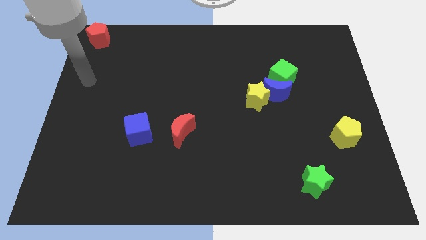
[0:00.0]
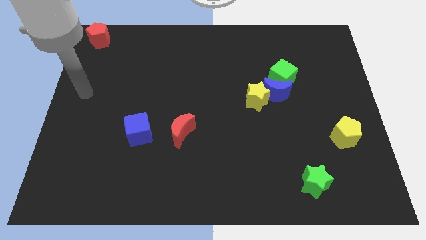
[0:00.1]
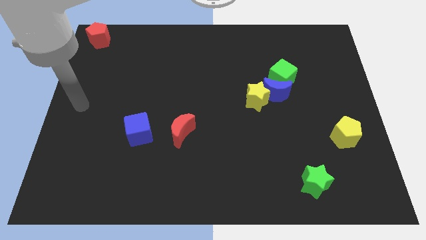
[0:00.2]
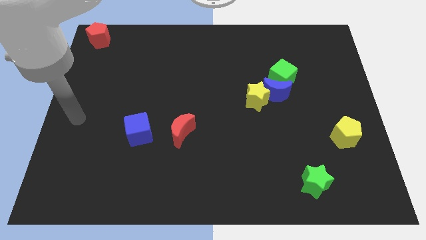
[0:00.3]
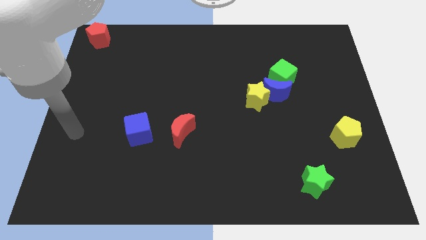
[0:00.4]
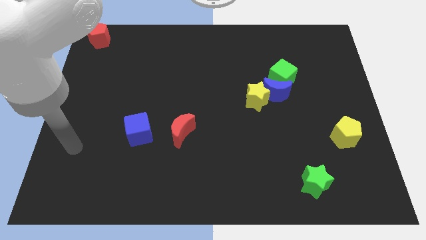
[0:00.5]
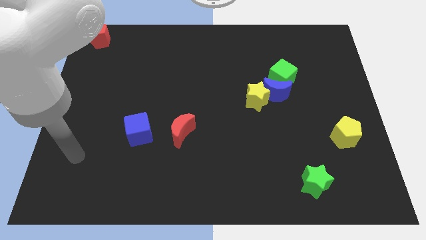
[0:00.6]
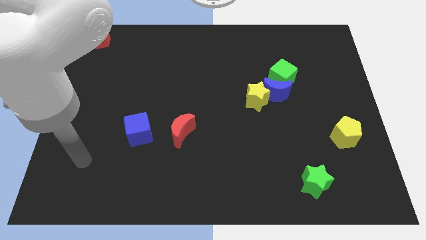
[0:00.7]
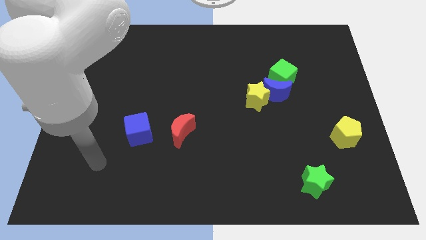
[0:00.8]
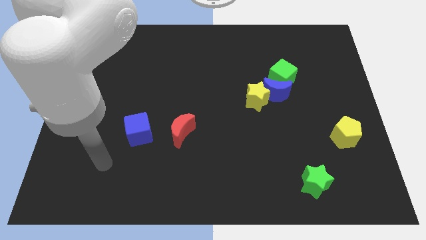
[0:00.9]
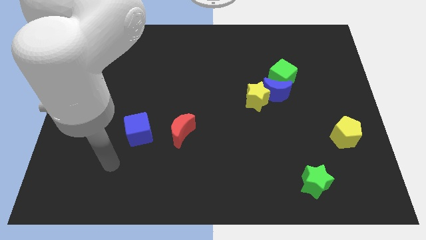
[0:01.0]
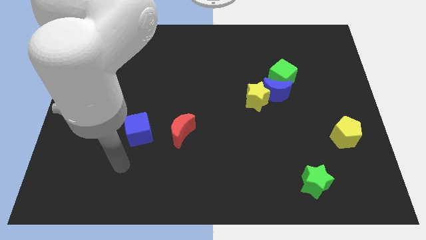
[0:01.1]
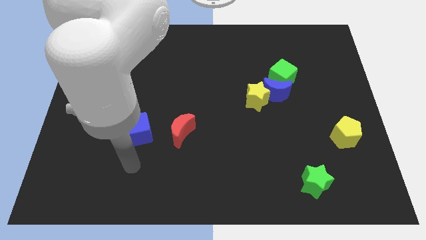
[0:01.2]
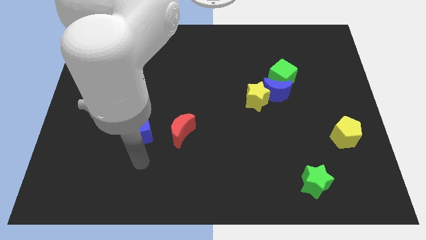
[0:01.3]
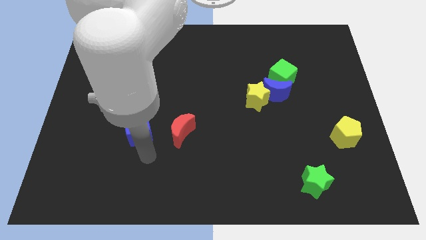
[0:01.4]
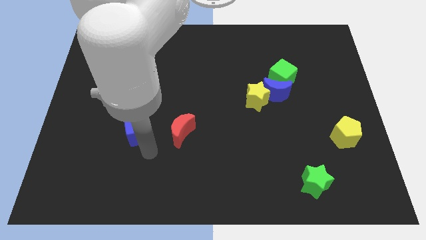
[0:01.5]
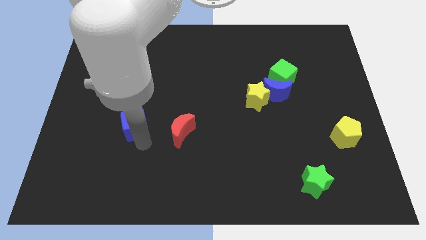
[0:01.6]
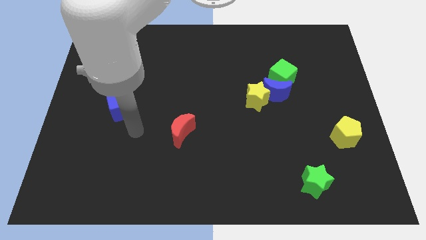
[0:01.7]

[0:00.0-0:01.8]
tap the blue cube

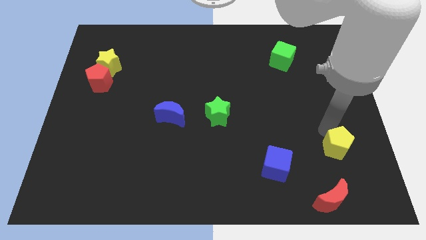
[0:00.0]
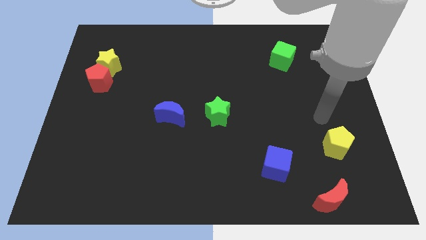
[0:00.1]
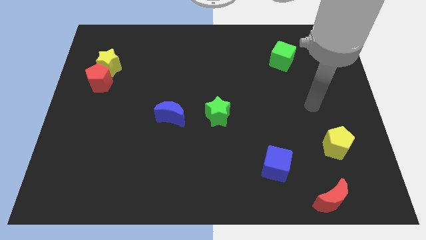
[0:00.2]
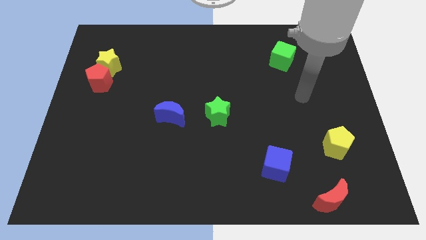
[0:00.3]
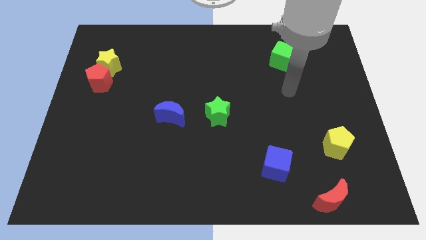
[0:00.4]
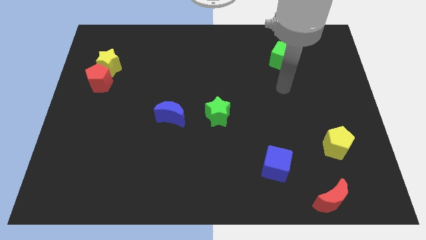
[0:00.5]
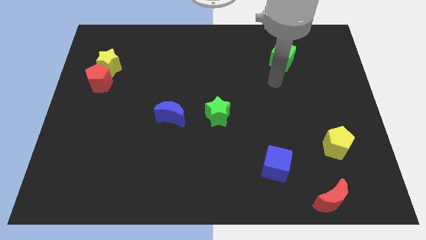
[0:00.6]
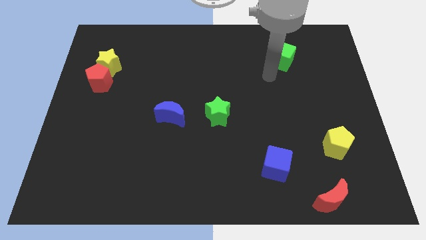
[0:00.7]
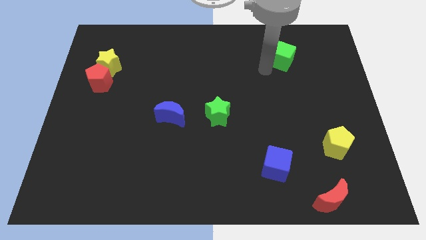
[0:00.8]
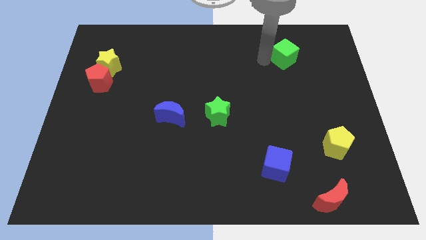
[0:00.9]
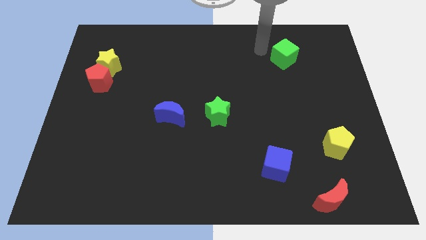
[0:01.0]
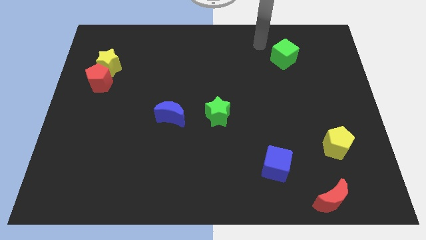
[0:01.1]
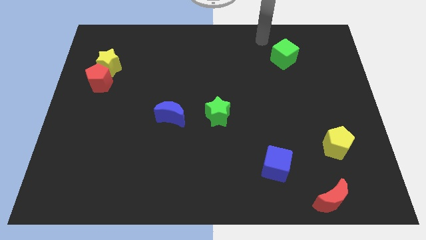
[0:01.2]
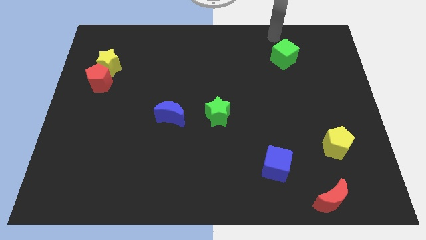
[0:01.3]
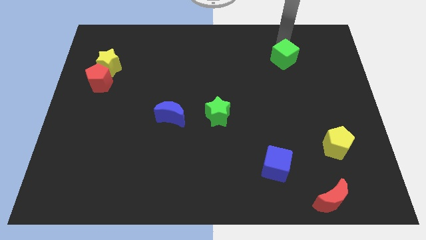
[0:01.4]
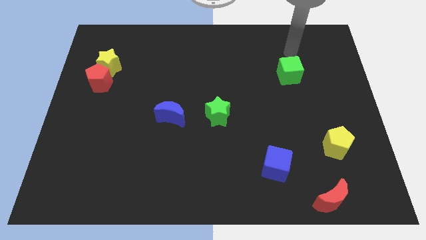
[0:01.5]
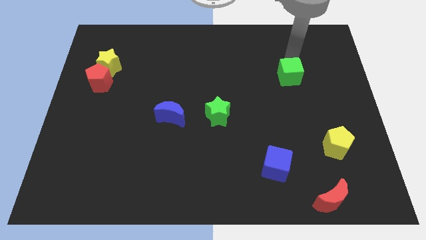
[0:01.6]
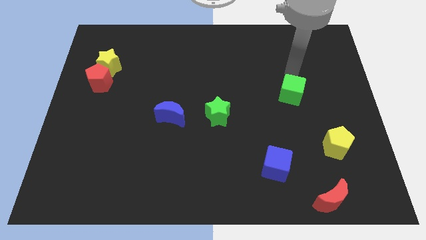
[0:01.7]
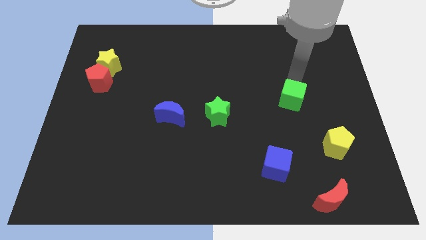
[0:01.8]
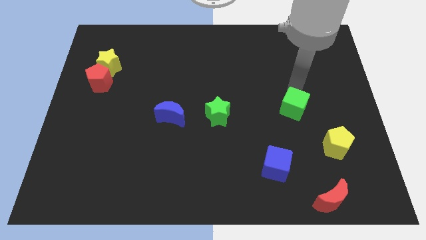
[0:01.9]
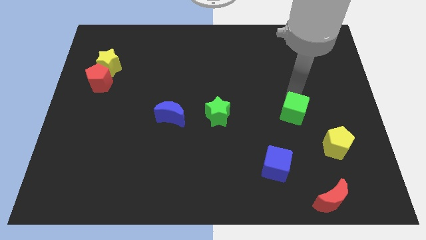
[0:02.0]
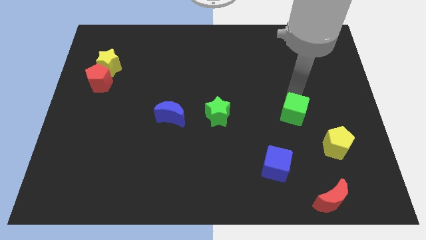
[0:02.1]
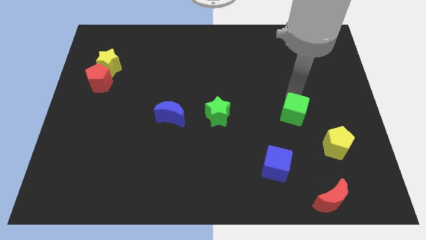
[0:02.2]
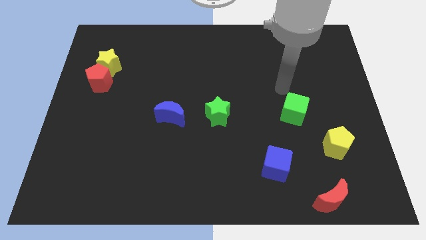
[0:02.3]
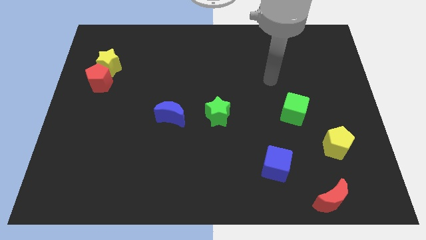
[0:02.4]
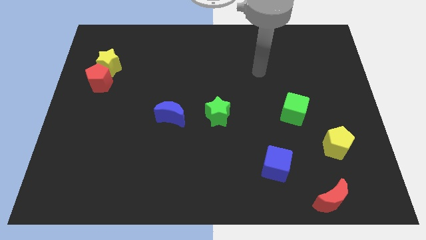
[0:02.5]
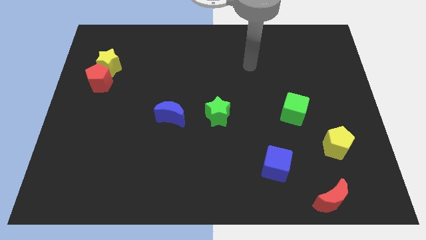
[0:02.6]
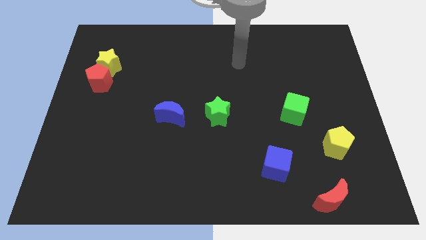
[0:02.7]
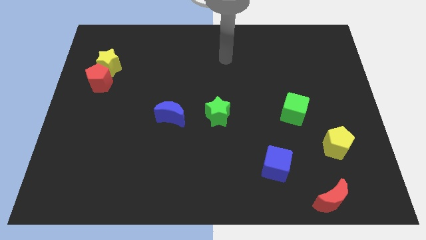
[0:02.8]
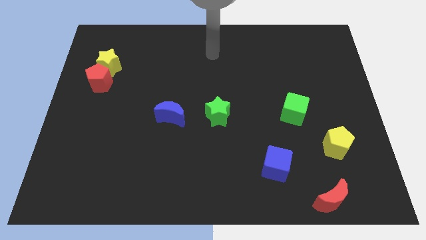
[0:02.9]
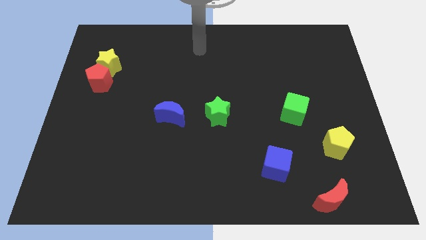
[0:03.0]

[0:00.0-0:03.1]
move the green cube closer to the yellow pentagon

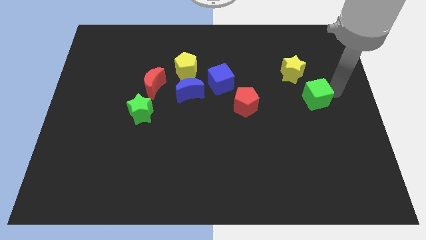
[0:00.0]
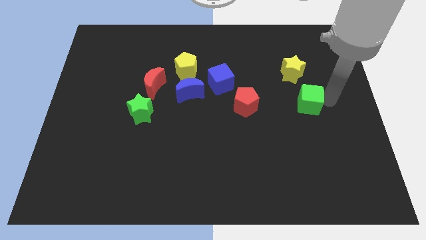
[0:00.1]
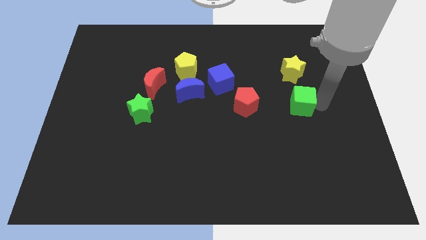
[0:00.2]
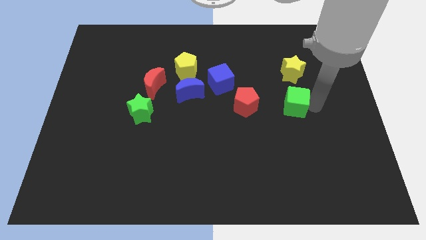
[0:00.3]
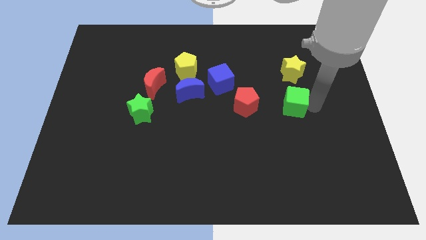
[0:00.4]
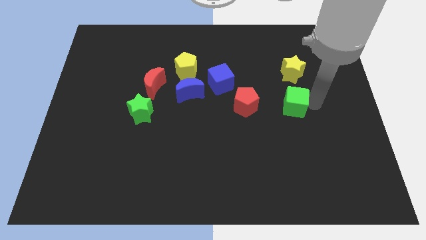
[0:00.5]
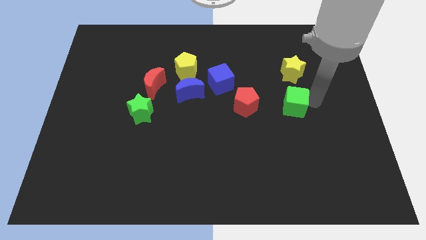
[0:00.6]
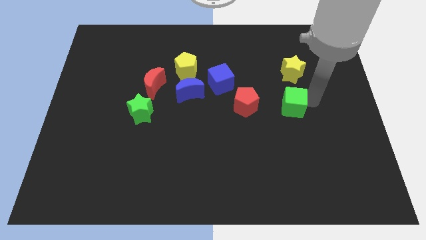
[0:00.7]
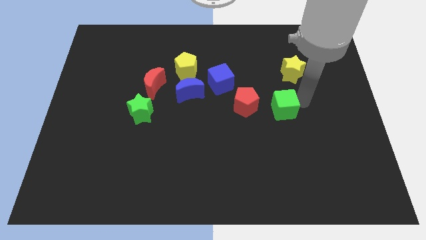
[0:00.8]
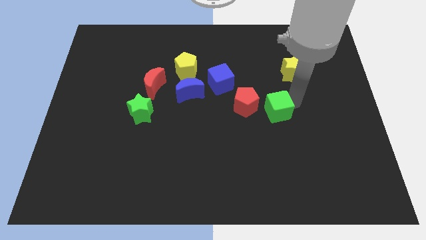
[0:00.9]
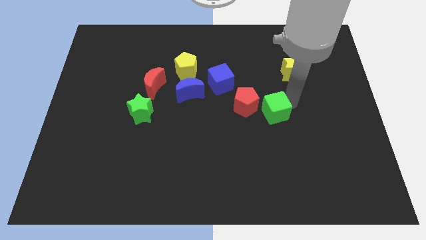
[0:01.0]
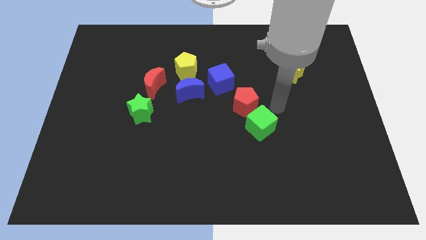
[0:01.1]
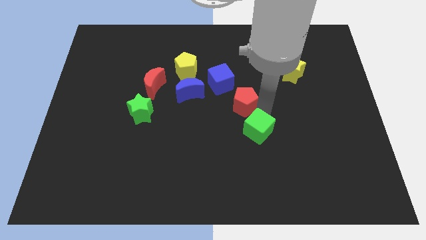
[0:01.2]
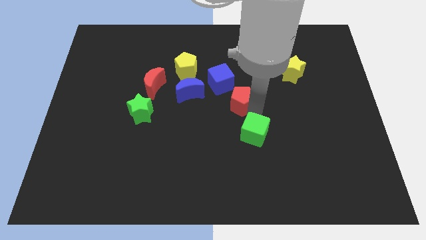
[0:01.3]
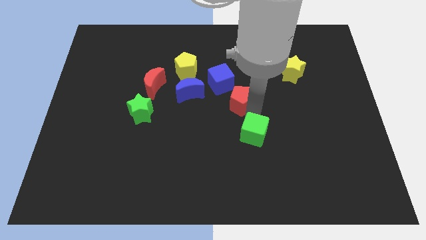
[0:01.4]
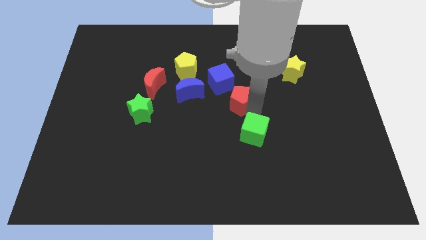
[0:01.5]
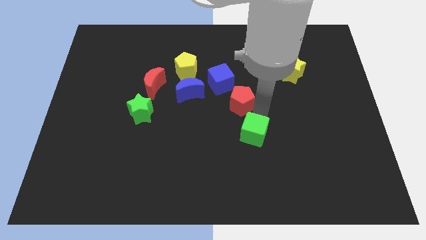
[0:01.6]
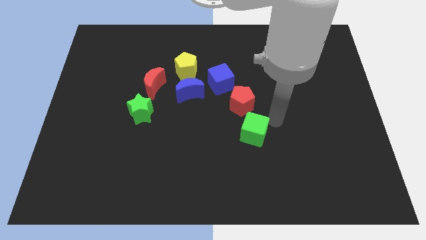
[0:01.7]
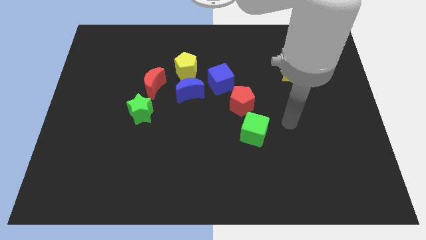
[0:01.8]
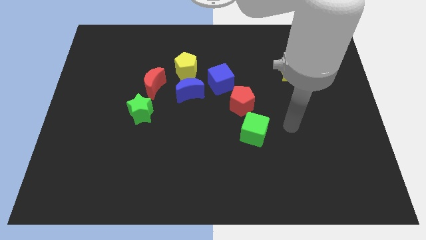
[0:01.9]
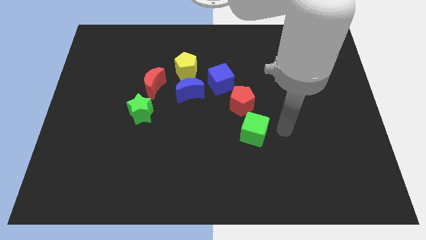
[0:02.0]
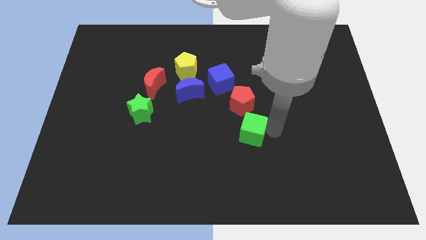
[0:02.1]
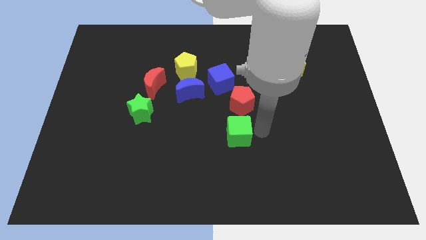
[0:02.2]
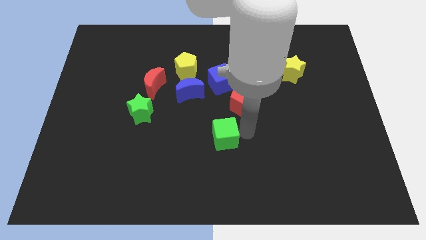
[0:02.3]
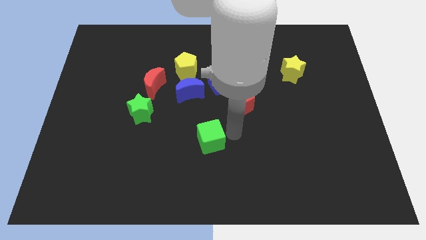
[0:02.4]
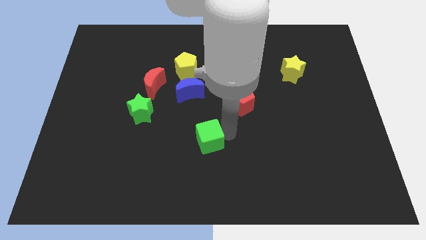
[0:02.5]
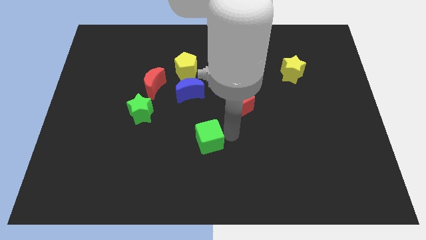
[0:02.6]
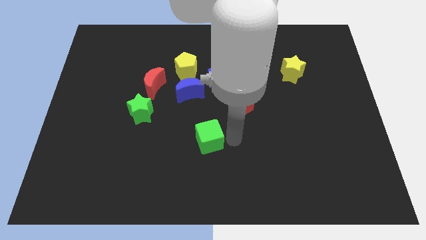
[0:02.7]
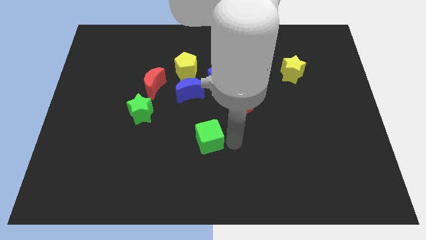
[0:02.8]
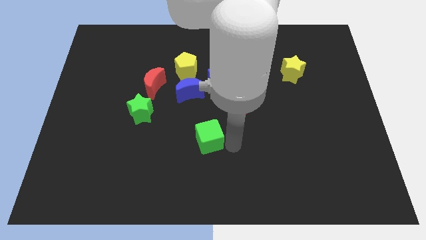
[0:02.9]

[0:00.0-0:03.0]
place the green cube below the blue moon

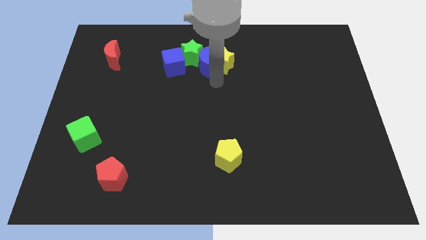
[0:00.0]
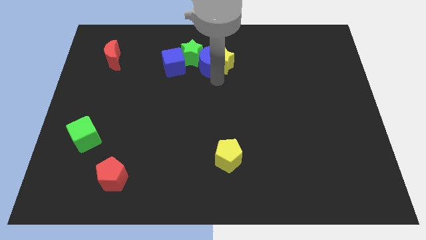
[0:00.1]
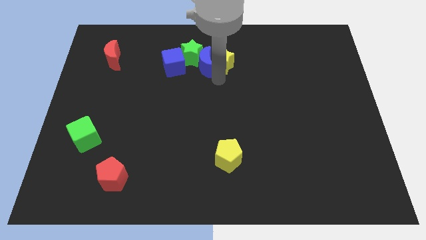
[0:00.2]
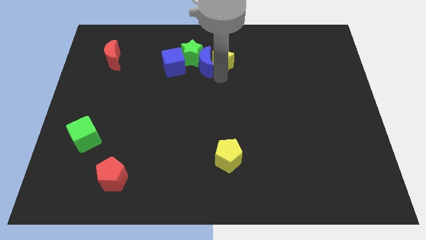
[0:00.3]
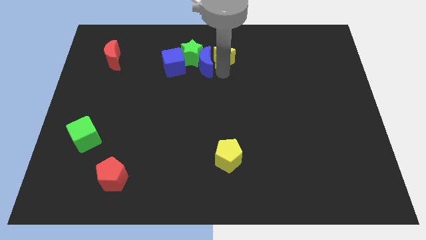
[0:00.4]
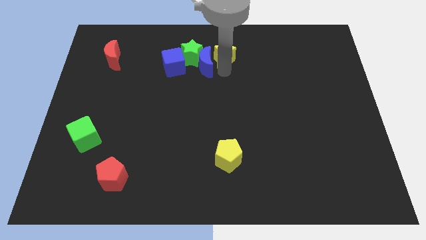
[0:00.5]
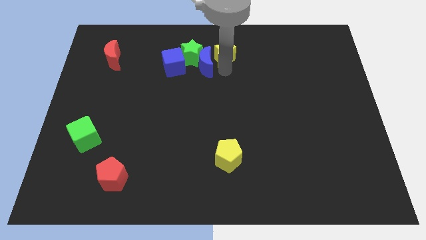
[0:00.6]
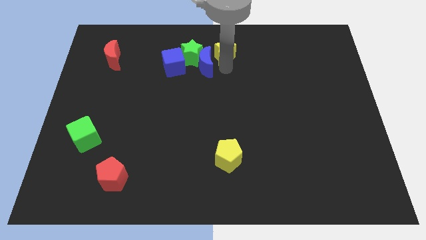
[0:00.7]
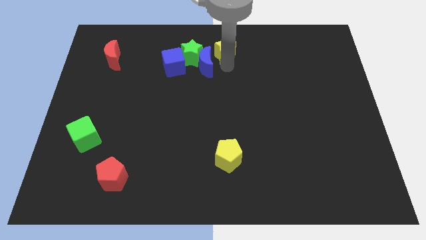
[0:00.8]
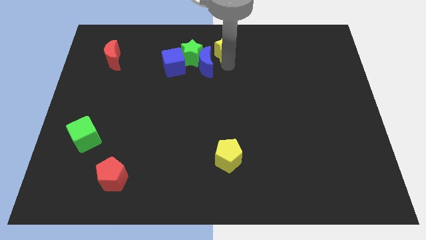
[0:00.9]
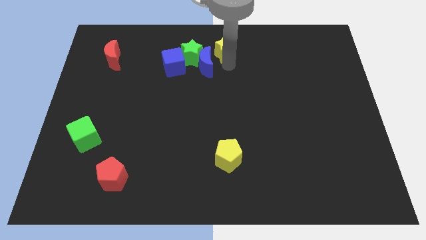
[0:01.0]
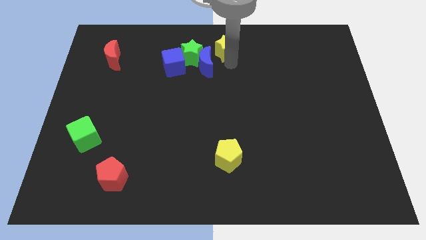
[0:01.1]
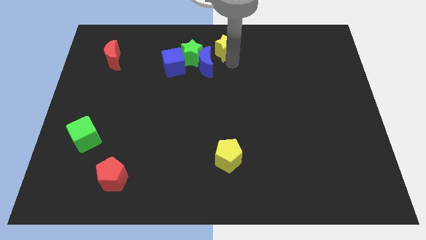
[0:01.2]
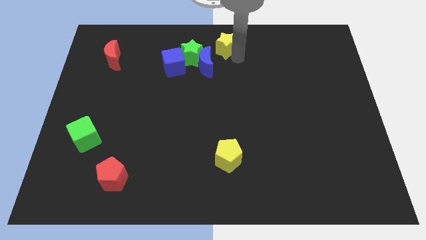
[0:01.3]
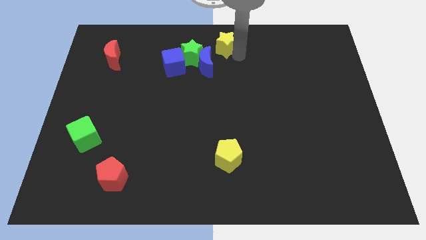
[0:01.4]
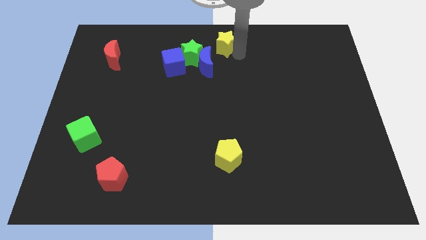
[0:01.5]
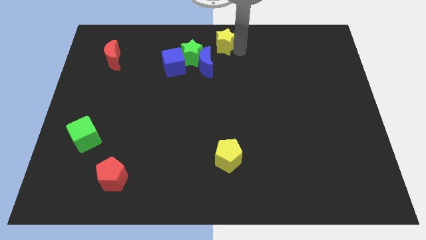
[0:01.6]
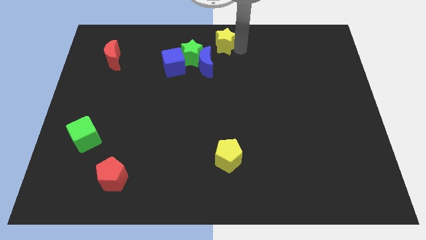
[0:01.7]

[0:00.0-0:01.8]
separate the yellow star from the blue crescent
